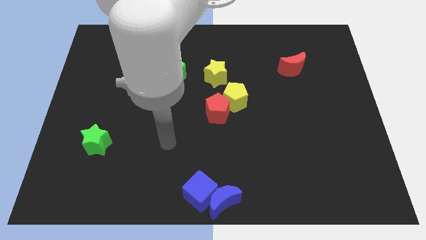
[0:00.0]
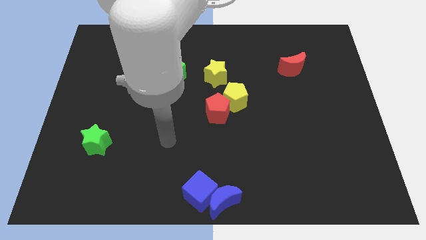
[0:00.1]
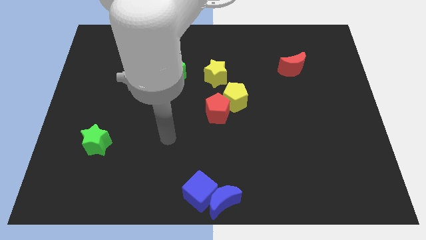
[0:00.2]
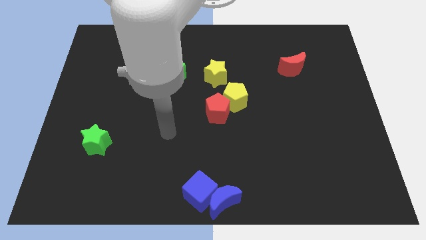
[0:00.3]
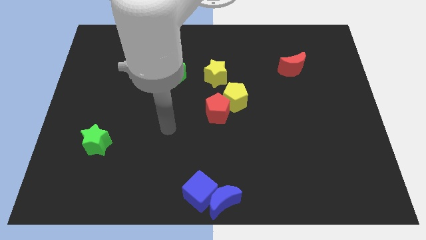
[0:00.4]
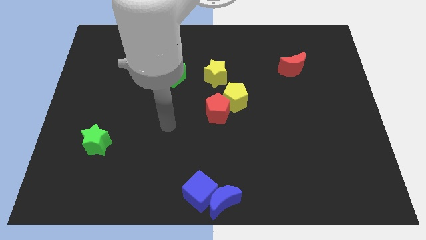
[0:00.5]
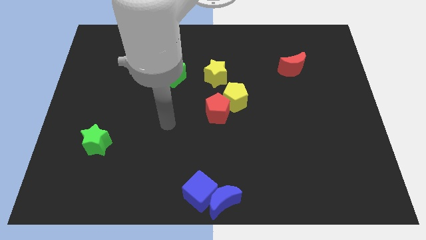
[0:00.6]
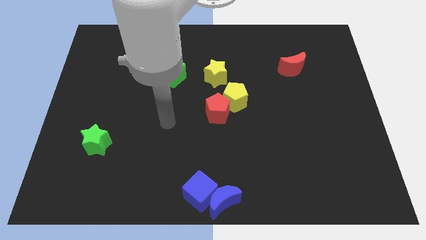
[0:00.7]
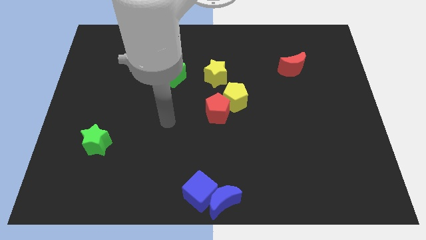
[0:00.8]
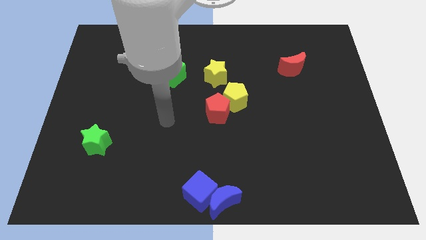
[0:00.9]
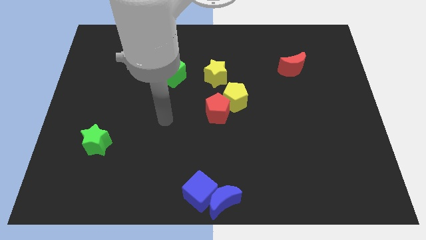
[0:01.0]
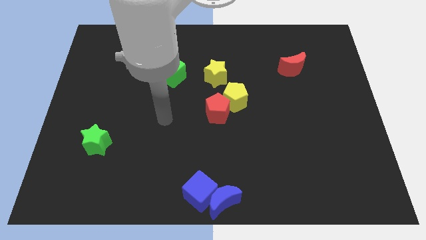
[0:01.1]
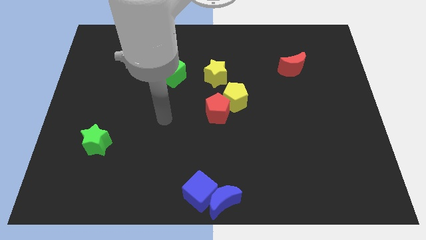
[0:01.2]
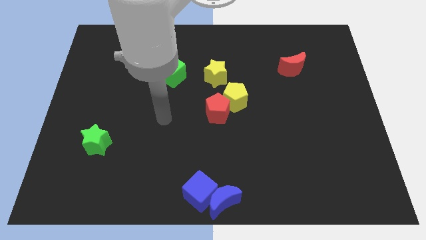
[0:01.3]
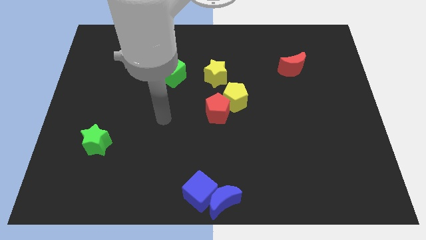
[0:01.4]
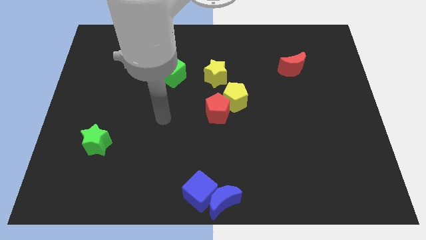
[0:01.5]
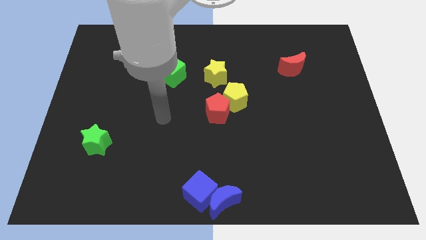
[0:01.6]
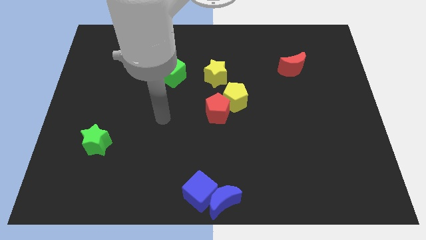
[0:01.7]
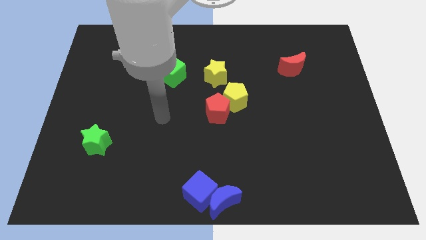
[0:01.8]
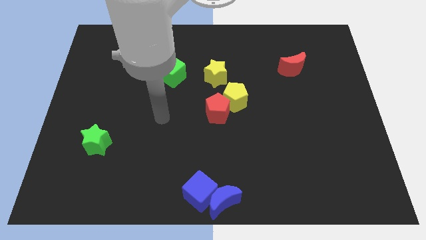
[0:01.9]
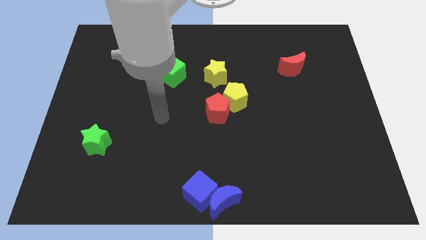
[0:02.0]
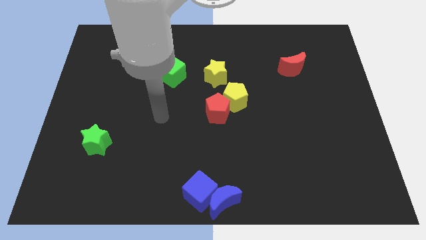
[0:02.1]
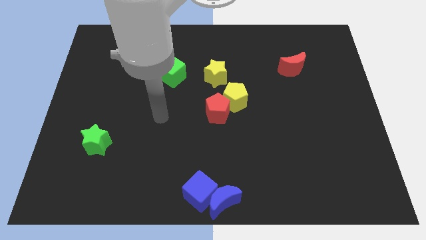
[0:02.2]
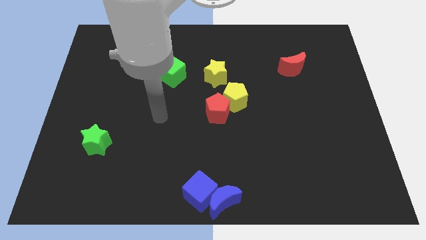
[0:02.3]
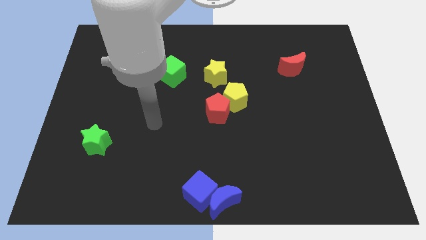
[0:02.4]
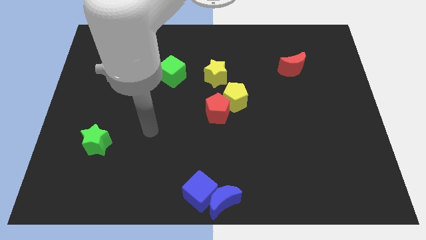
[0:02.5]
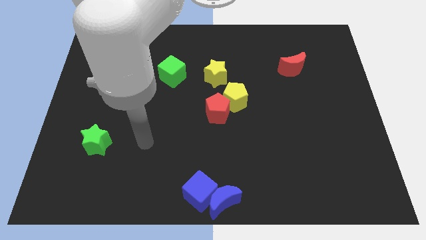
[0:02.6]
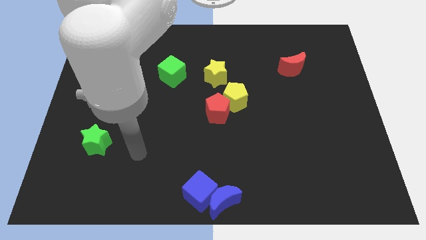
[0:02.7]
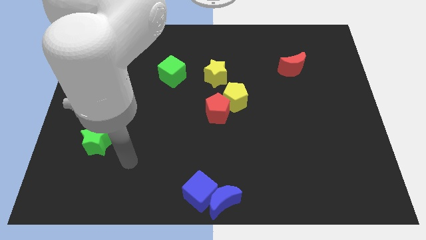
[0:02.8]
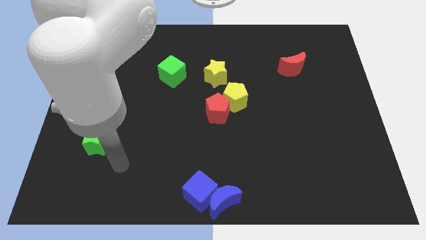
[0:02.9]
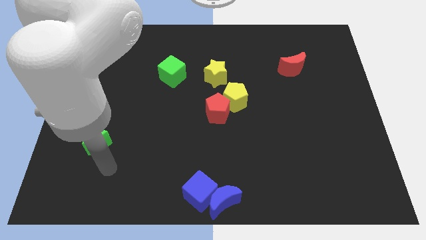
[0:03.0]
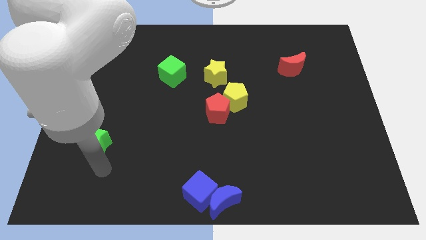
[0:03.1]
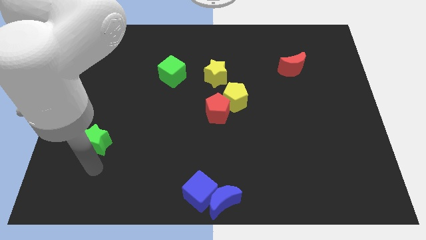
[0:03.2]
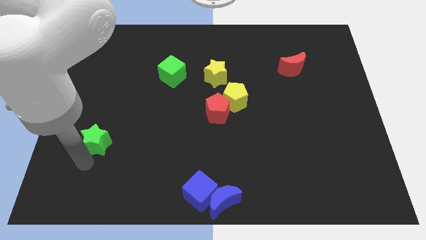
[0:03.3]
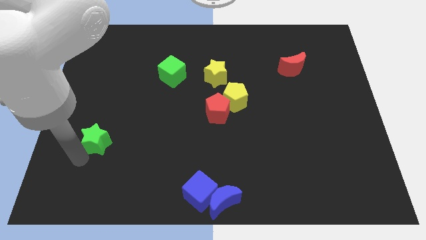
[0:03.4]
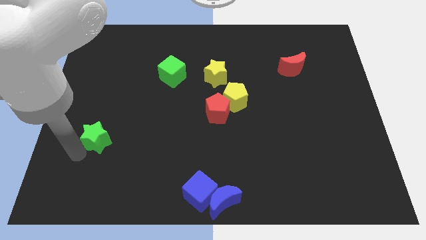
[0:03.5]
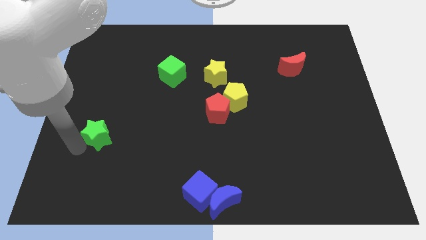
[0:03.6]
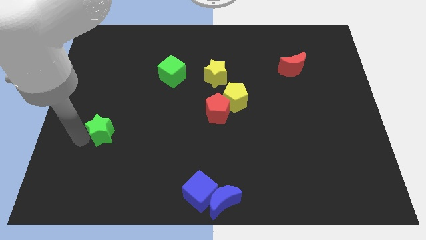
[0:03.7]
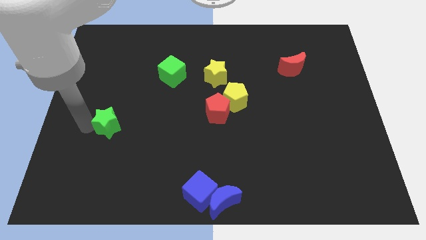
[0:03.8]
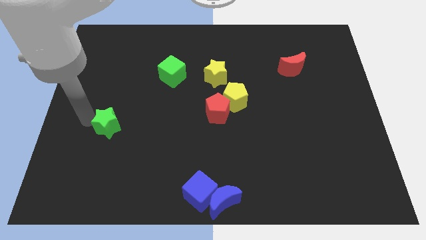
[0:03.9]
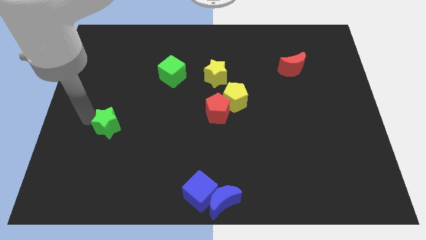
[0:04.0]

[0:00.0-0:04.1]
slightly move the green star towards top side

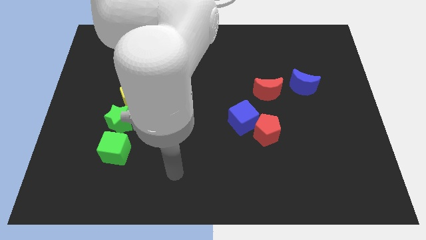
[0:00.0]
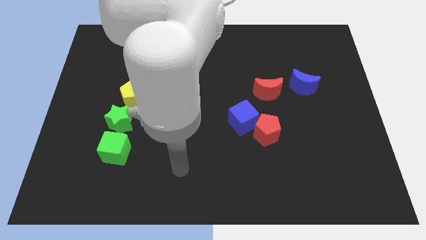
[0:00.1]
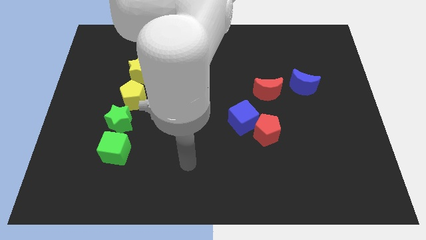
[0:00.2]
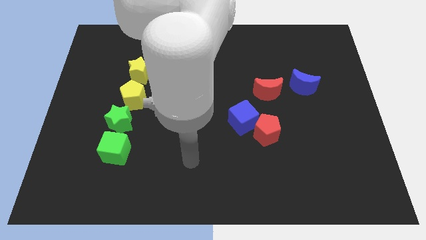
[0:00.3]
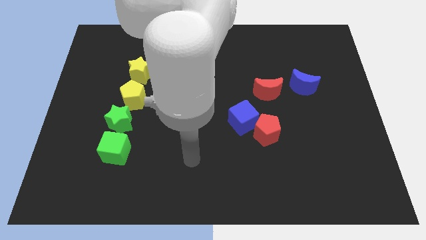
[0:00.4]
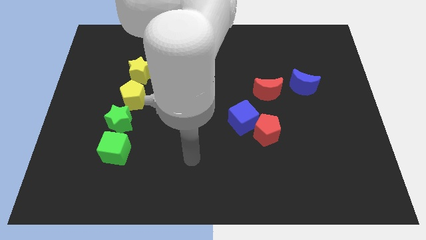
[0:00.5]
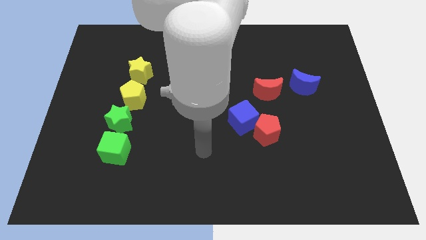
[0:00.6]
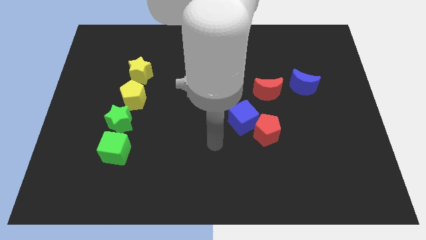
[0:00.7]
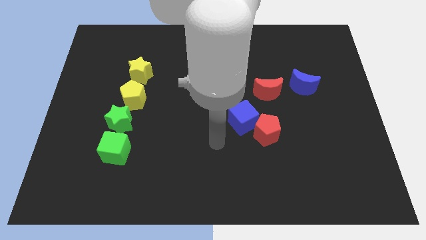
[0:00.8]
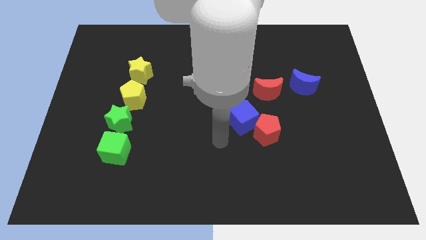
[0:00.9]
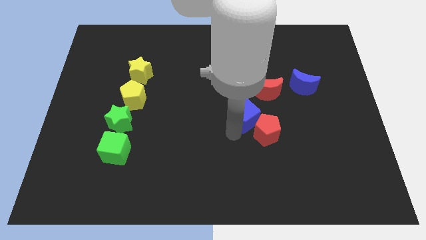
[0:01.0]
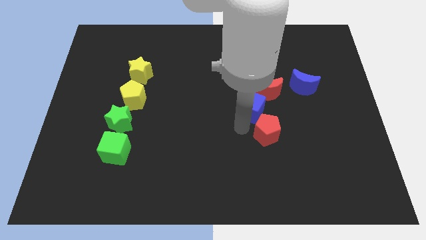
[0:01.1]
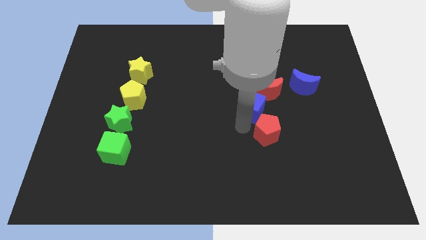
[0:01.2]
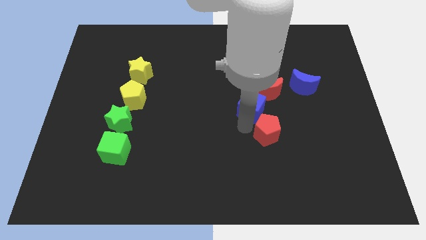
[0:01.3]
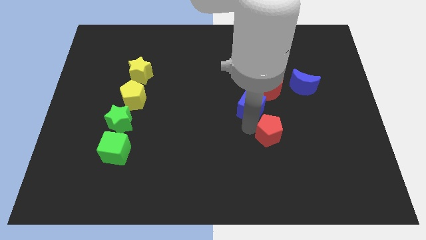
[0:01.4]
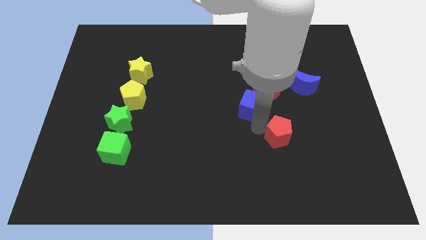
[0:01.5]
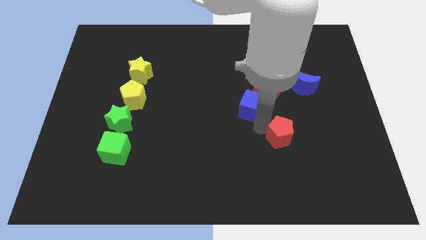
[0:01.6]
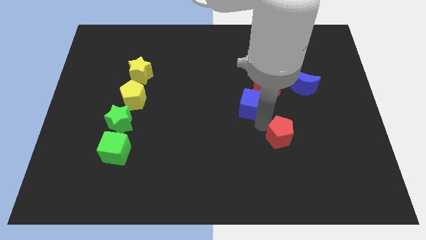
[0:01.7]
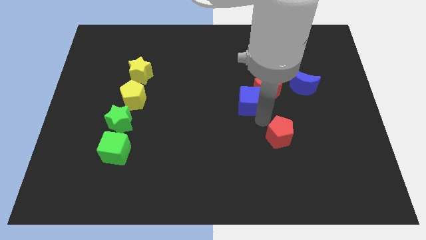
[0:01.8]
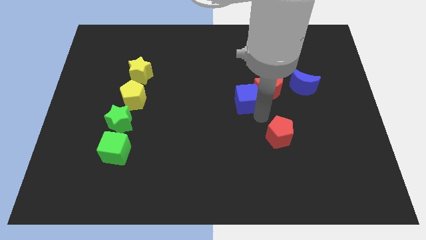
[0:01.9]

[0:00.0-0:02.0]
separate the blue cube and red pentagon

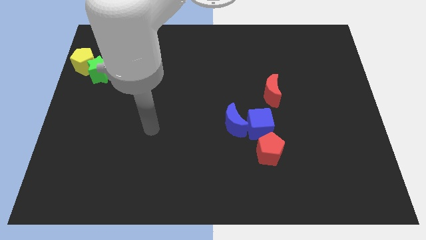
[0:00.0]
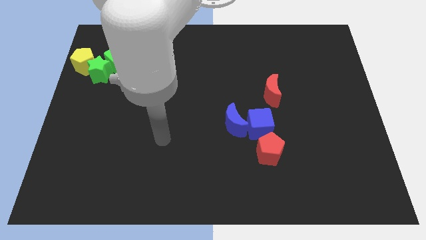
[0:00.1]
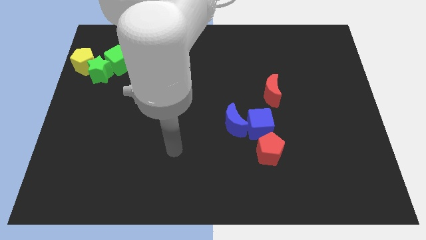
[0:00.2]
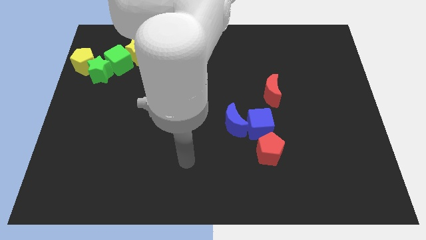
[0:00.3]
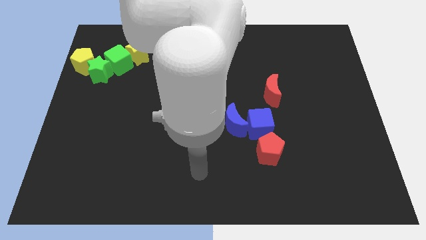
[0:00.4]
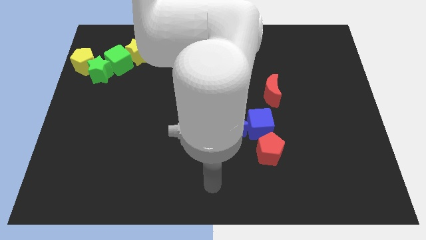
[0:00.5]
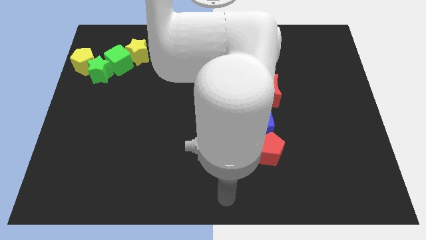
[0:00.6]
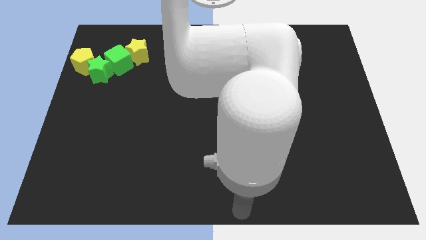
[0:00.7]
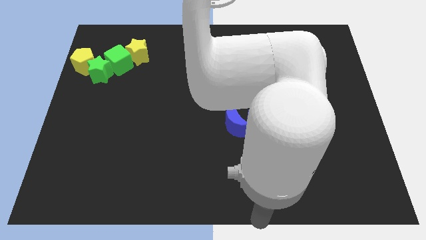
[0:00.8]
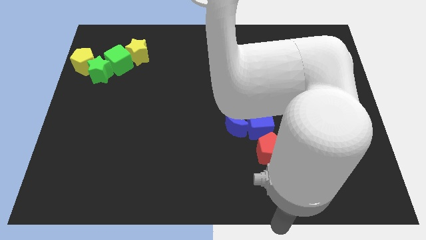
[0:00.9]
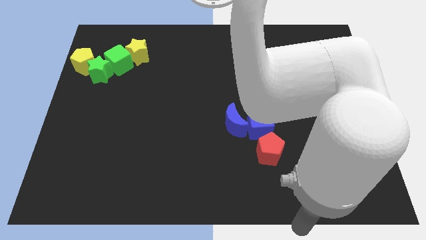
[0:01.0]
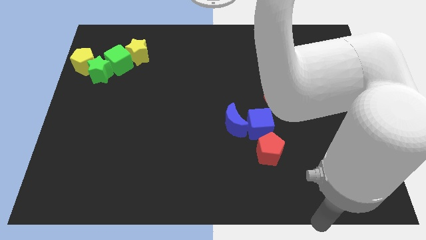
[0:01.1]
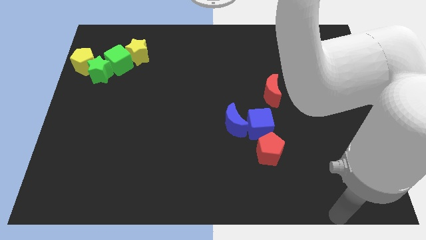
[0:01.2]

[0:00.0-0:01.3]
point the arm at the bottom of the board

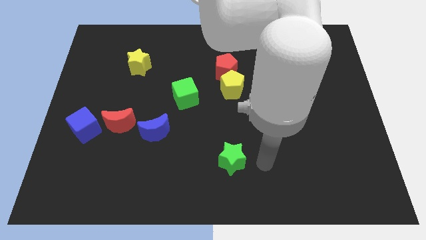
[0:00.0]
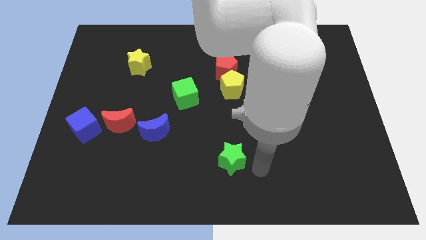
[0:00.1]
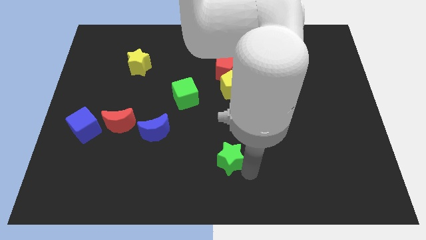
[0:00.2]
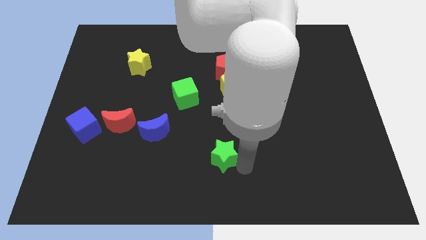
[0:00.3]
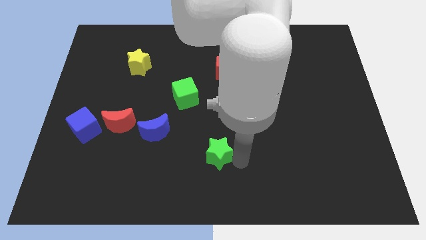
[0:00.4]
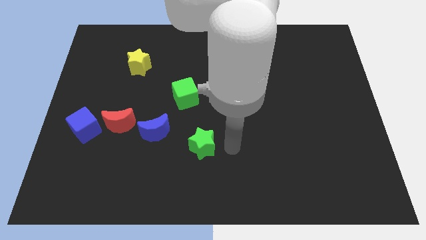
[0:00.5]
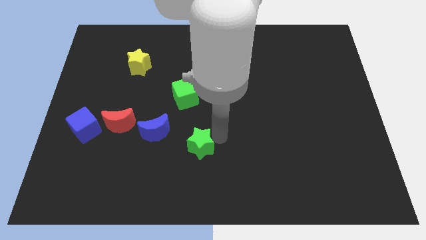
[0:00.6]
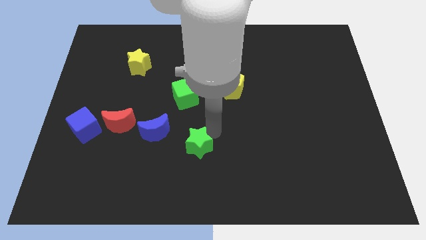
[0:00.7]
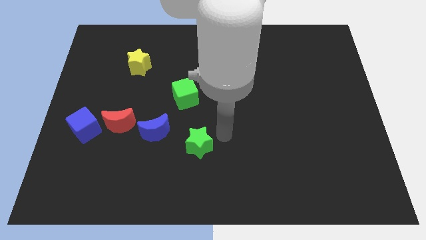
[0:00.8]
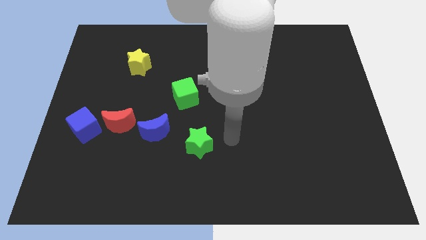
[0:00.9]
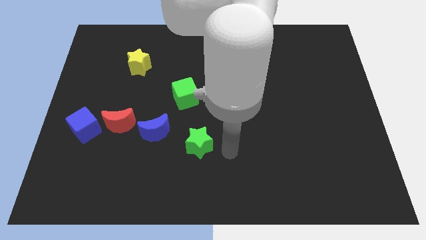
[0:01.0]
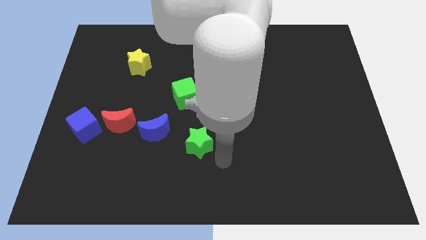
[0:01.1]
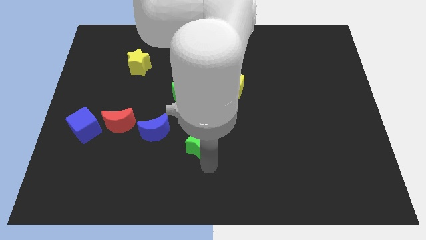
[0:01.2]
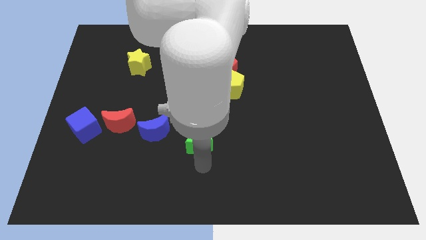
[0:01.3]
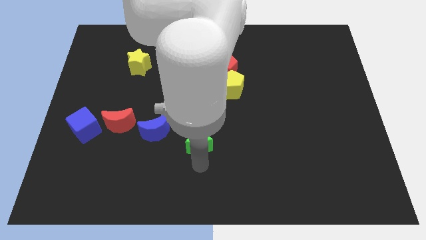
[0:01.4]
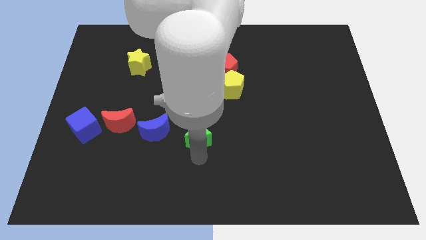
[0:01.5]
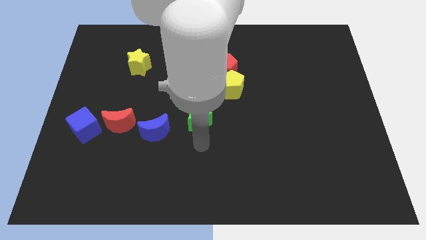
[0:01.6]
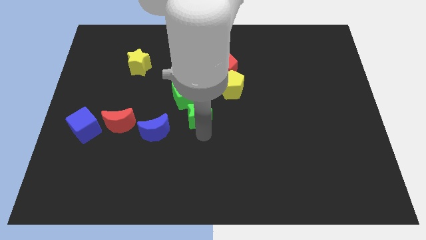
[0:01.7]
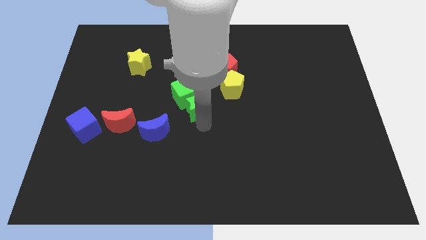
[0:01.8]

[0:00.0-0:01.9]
push the green star towards the green cube
